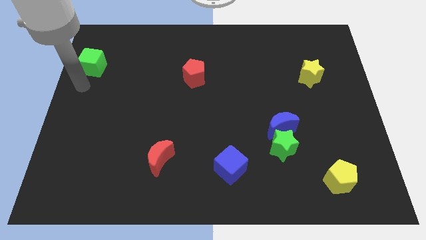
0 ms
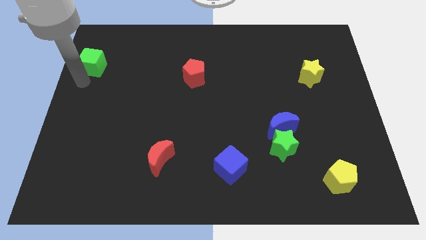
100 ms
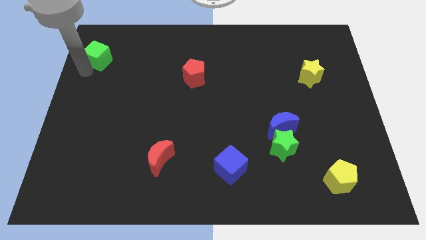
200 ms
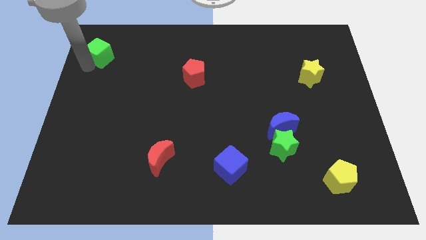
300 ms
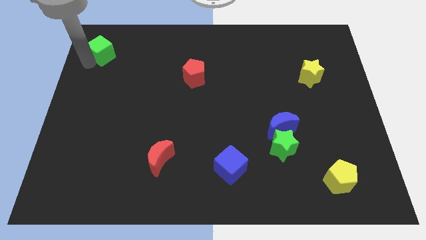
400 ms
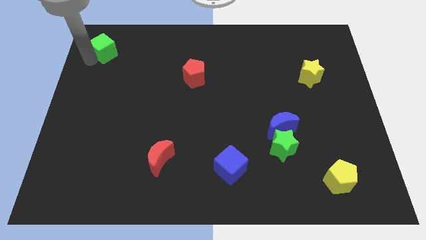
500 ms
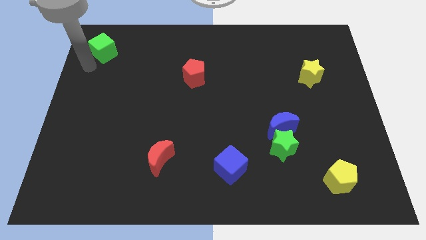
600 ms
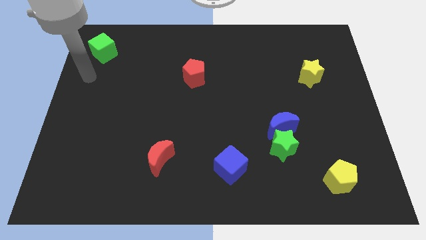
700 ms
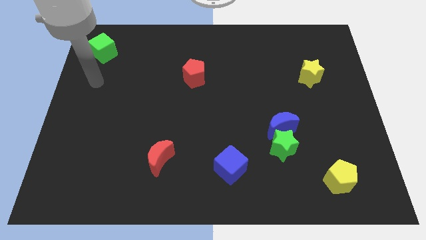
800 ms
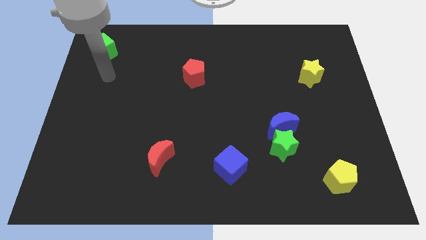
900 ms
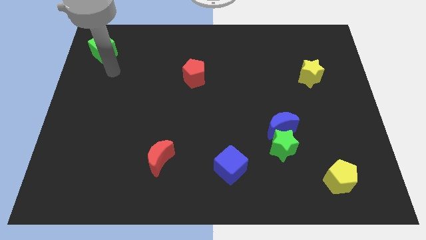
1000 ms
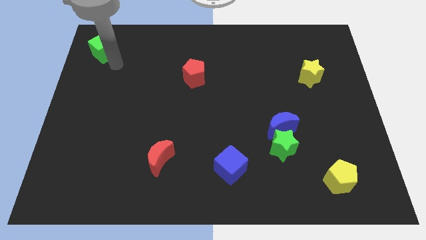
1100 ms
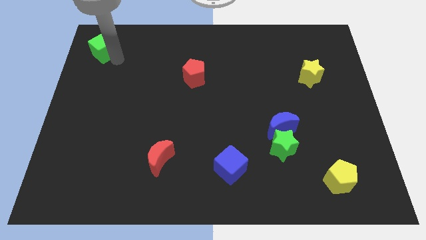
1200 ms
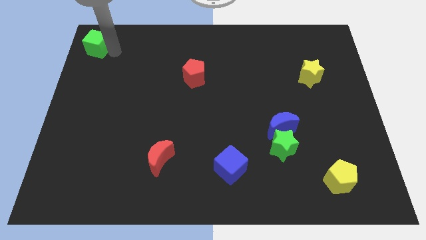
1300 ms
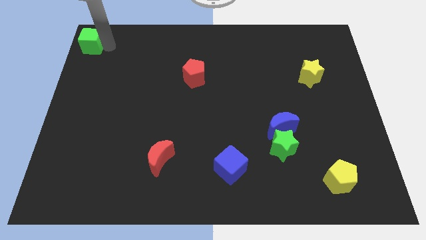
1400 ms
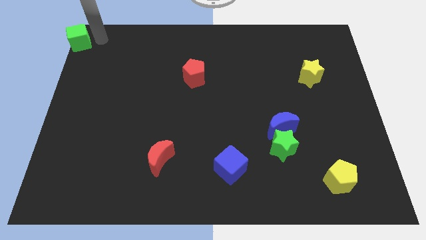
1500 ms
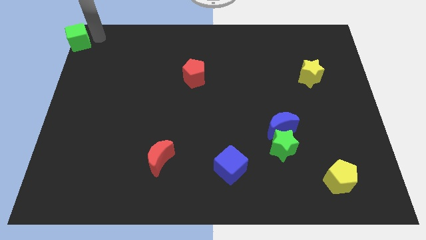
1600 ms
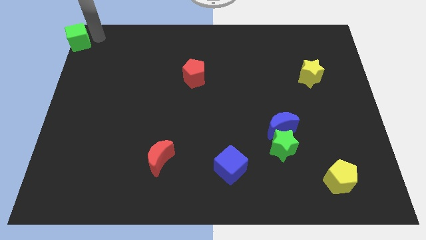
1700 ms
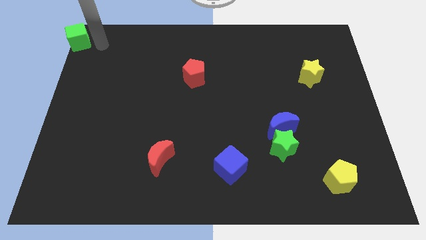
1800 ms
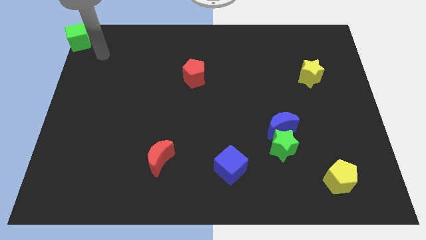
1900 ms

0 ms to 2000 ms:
push the green cube to the top left corner

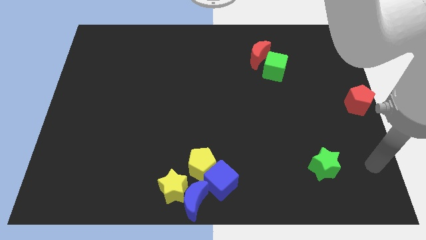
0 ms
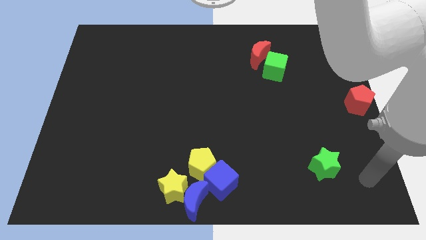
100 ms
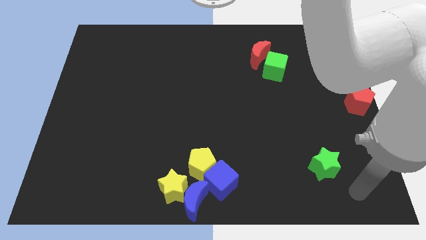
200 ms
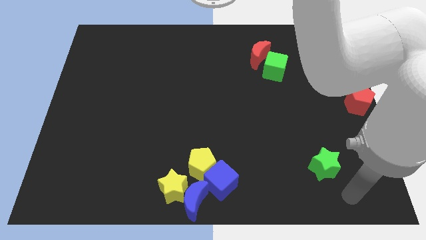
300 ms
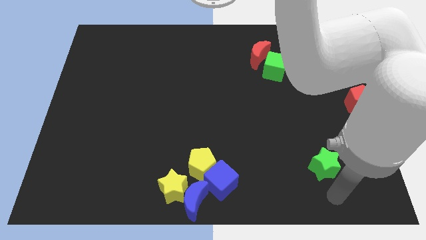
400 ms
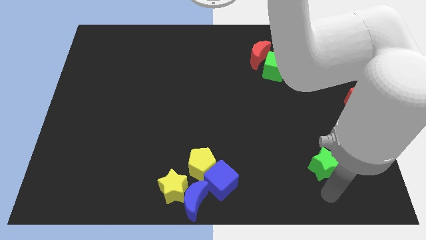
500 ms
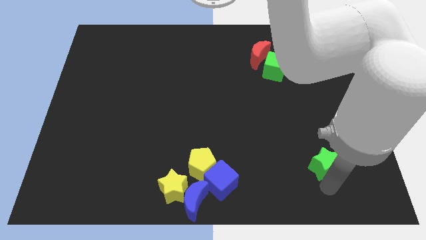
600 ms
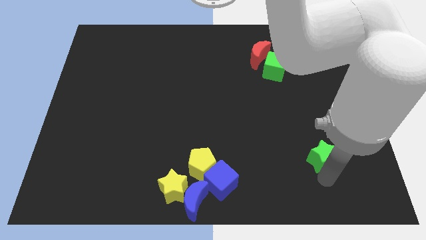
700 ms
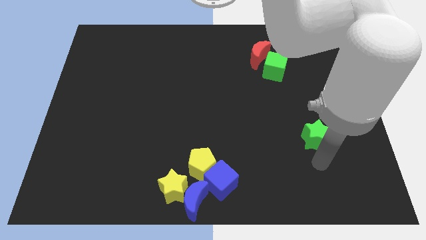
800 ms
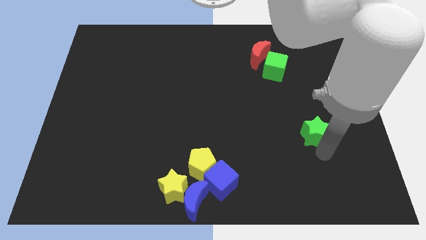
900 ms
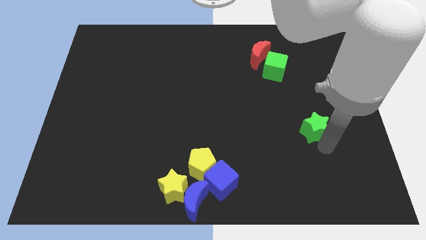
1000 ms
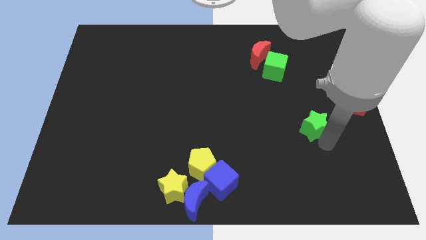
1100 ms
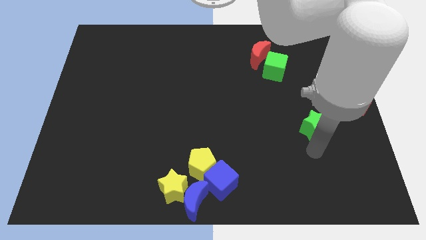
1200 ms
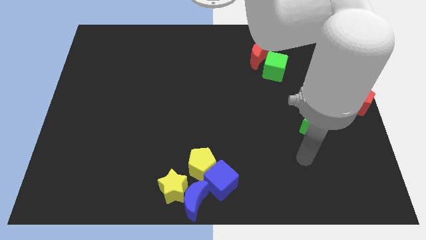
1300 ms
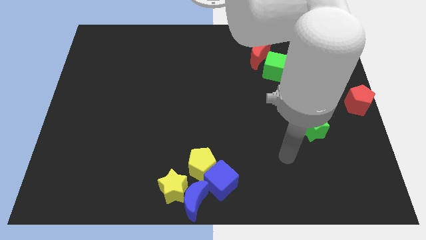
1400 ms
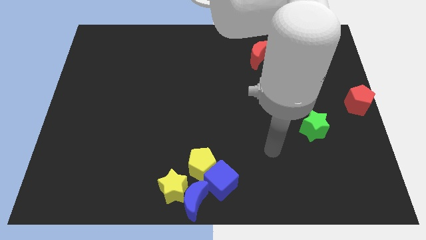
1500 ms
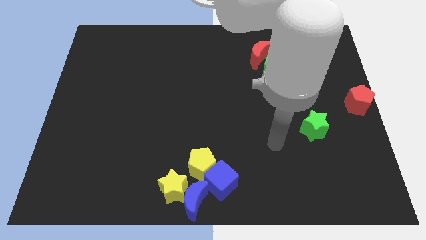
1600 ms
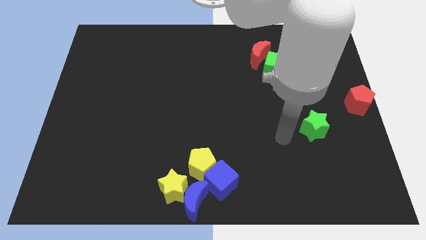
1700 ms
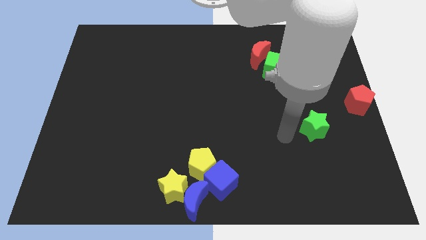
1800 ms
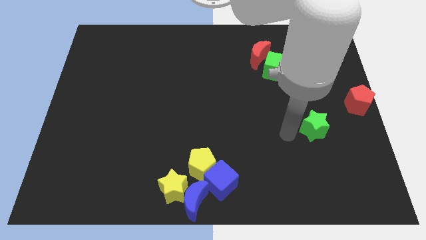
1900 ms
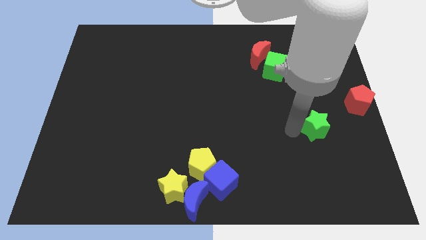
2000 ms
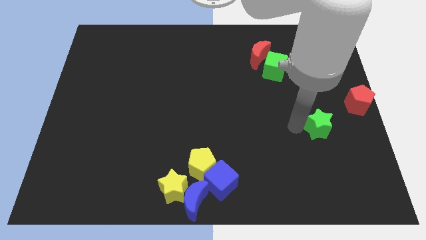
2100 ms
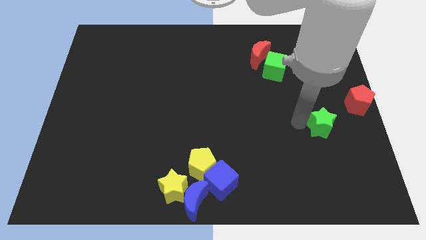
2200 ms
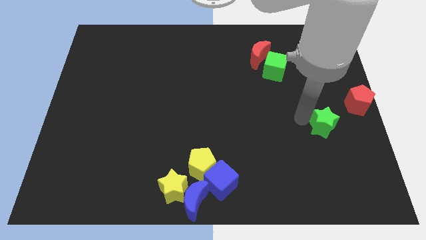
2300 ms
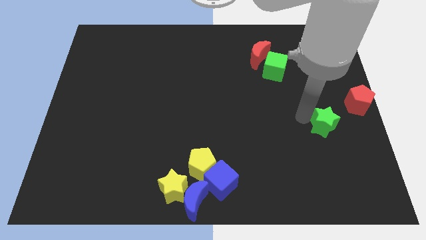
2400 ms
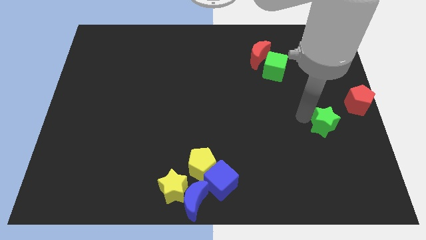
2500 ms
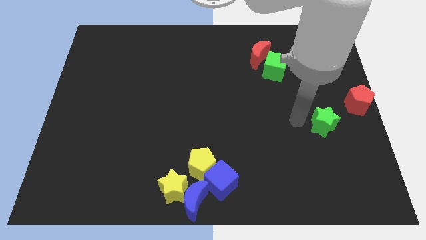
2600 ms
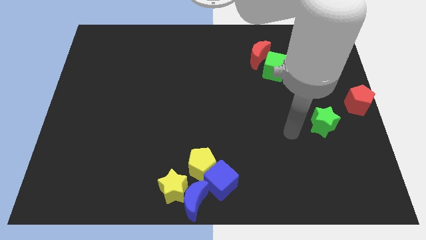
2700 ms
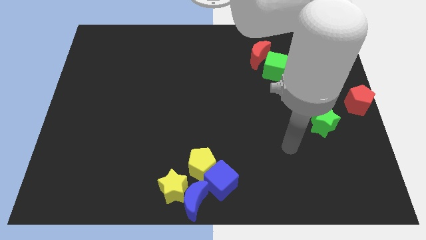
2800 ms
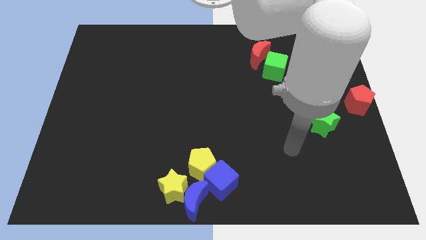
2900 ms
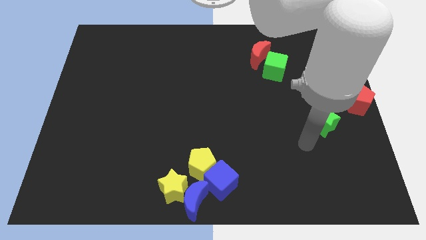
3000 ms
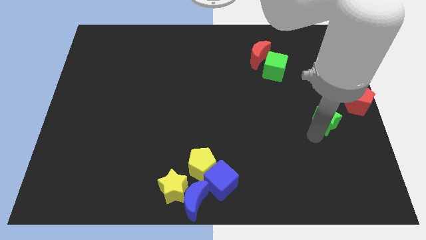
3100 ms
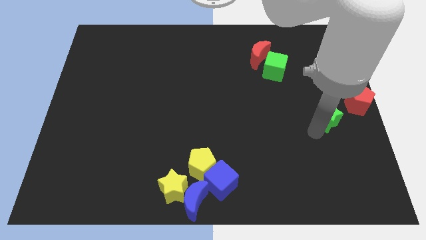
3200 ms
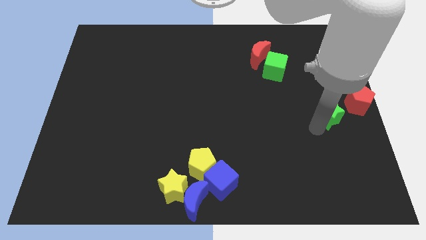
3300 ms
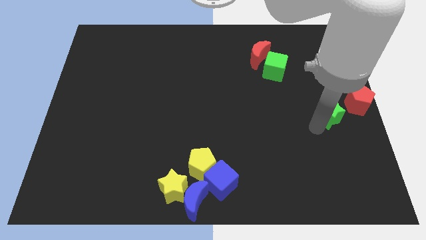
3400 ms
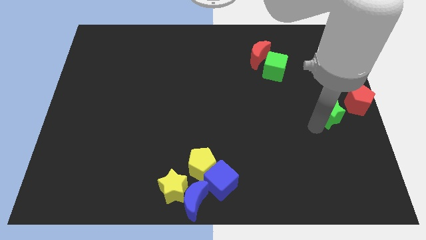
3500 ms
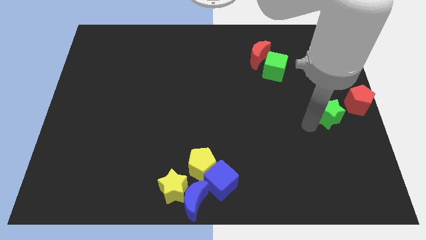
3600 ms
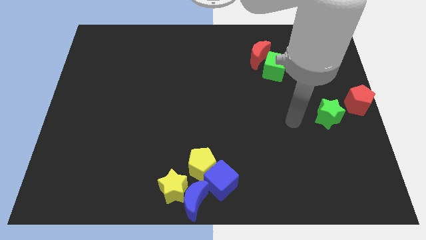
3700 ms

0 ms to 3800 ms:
drag the green star to the bottom left side of the red pentagon

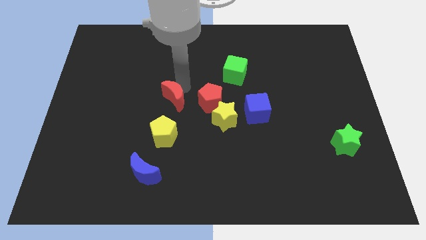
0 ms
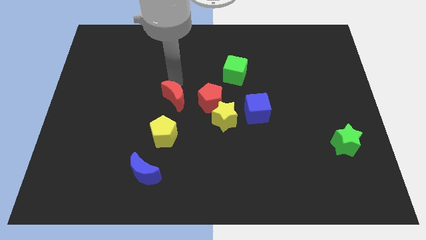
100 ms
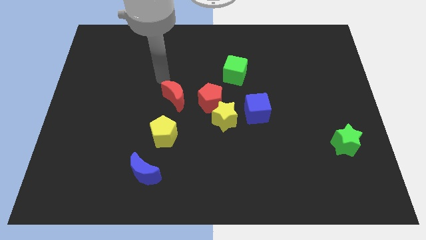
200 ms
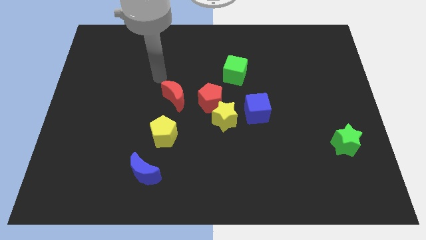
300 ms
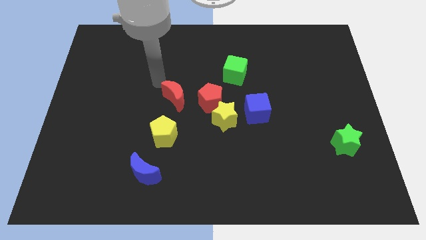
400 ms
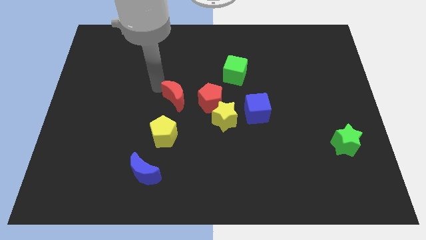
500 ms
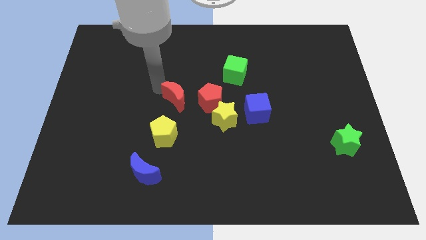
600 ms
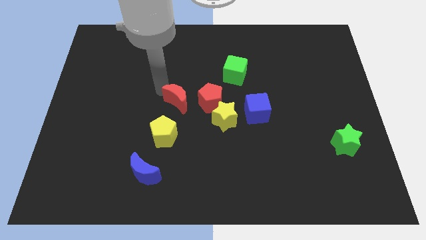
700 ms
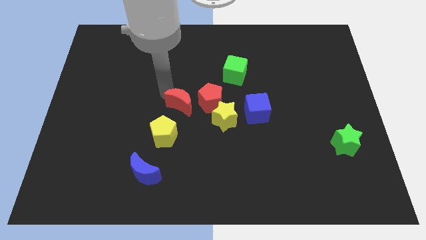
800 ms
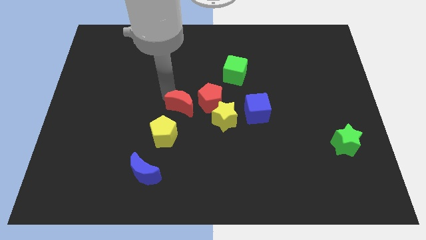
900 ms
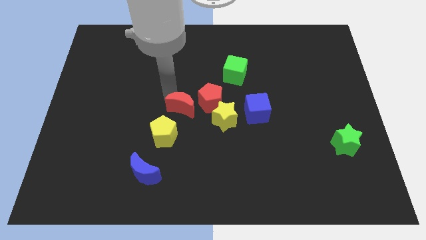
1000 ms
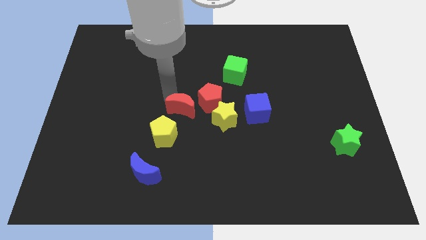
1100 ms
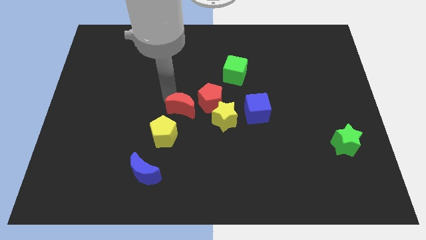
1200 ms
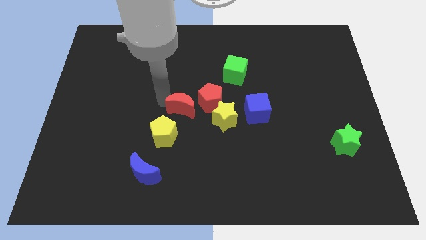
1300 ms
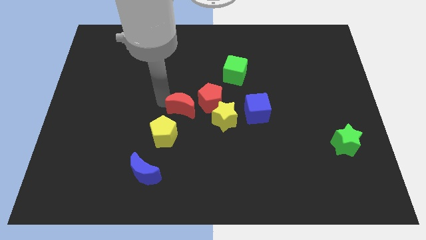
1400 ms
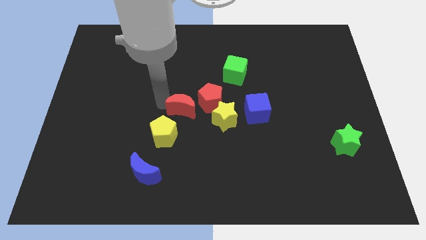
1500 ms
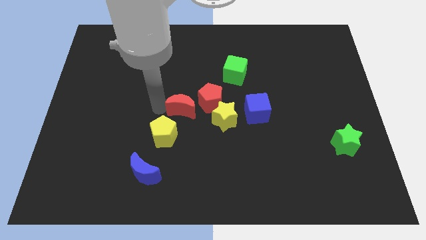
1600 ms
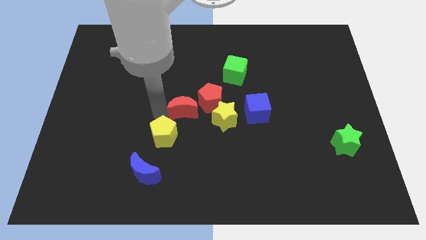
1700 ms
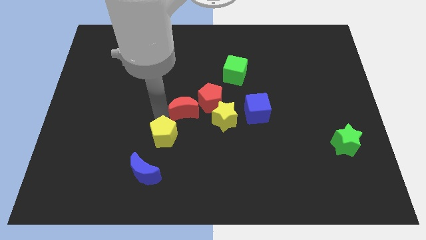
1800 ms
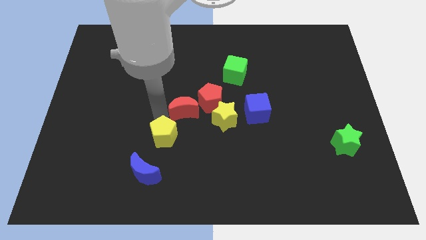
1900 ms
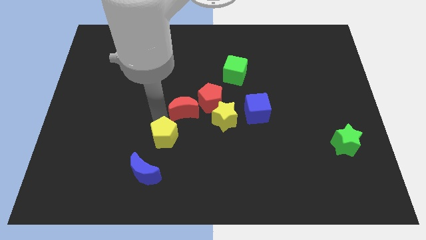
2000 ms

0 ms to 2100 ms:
slightly move the red crescent closer to the yellow pentagon

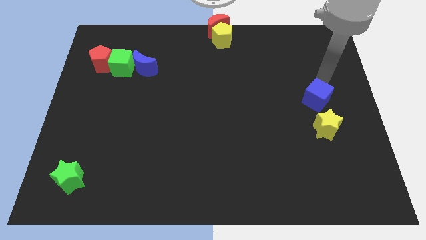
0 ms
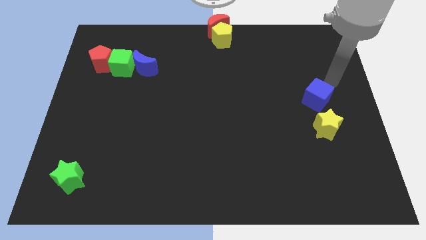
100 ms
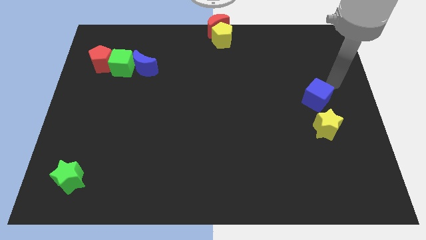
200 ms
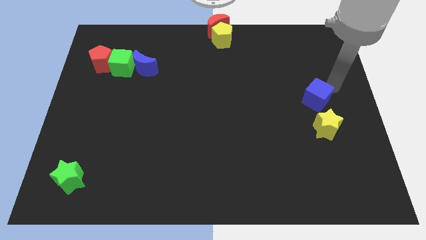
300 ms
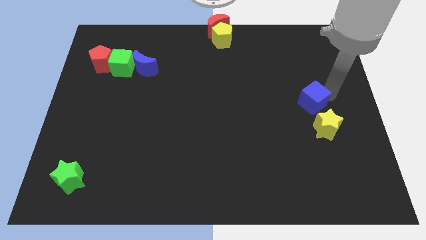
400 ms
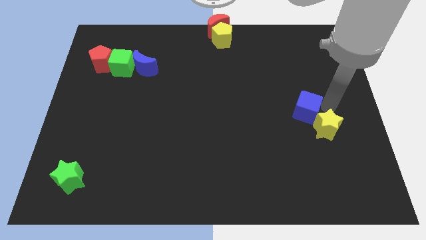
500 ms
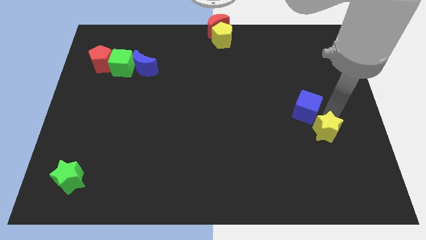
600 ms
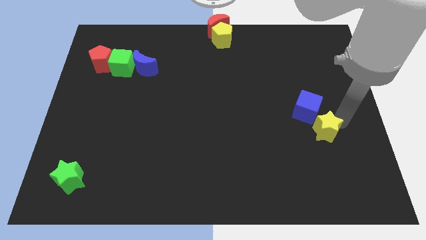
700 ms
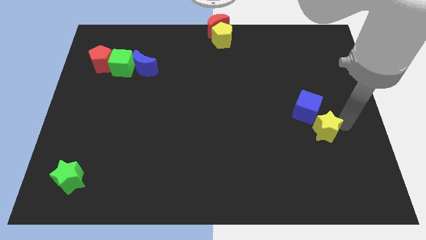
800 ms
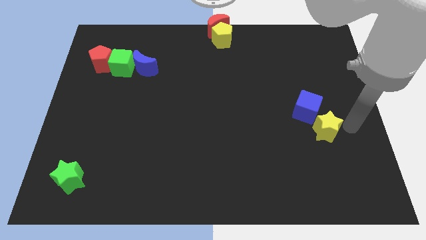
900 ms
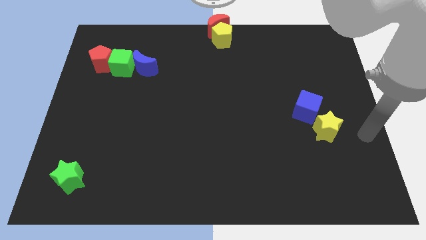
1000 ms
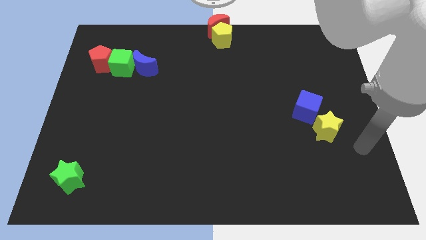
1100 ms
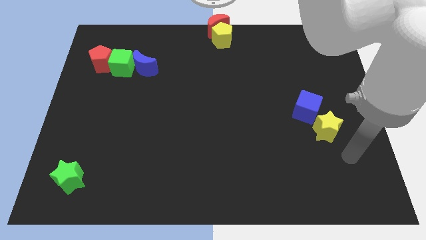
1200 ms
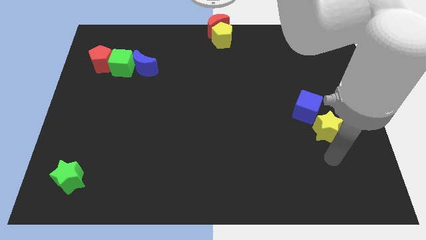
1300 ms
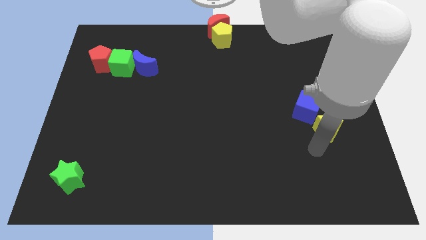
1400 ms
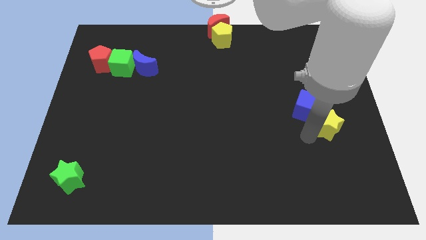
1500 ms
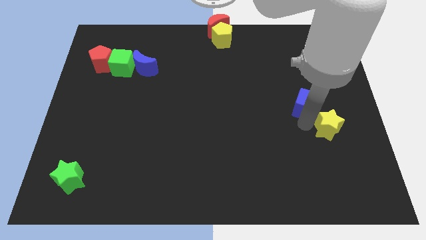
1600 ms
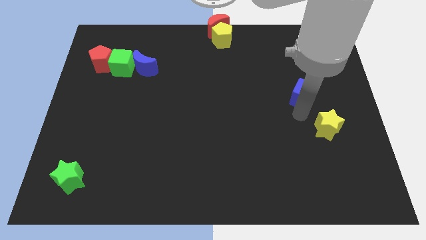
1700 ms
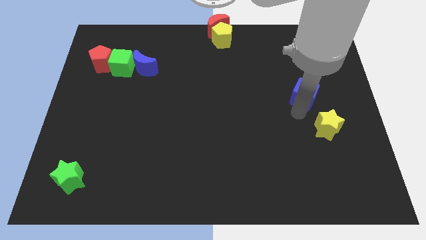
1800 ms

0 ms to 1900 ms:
move blue cube slightly up
